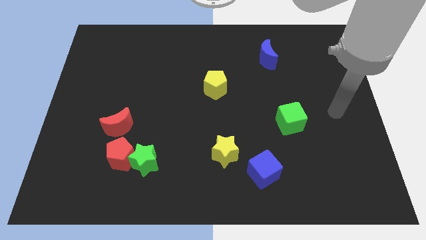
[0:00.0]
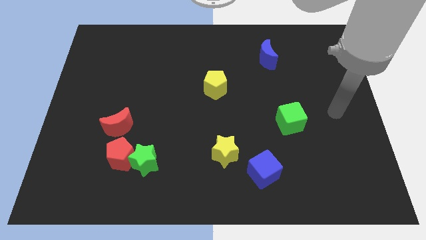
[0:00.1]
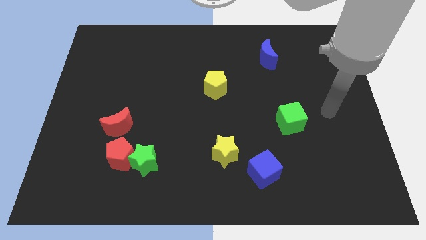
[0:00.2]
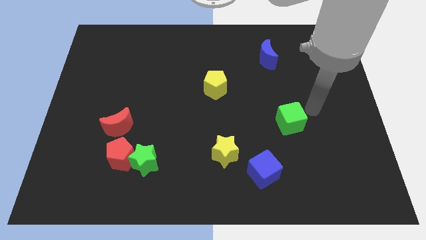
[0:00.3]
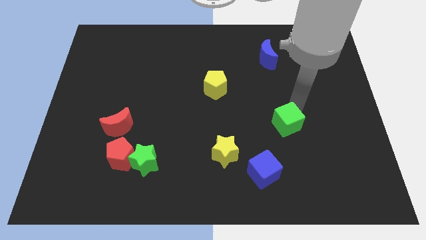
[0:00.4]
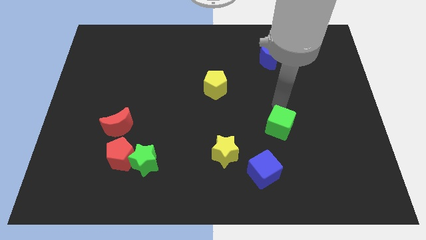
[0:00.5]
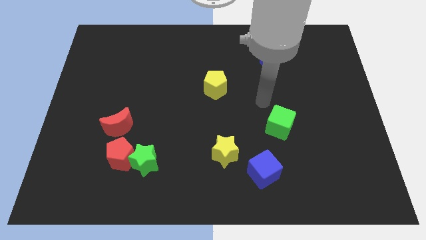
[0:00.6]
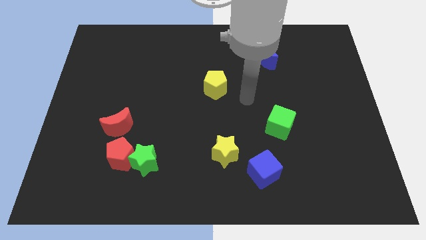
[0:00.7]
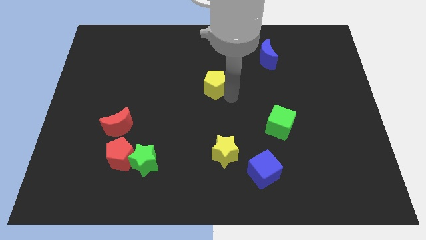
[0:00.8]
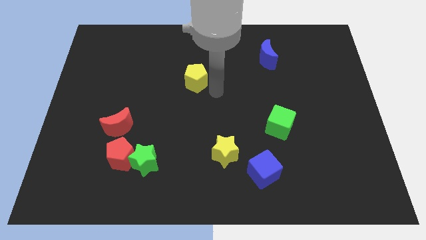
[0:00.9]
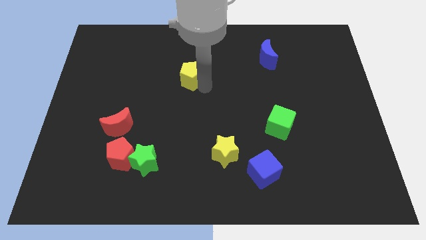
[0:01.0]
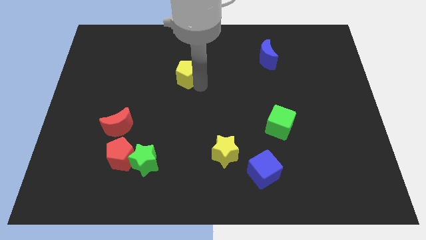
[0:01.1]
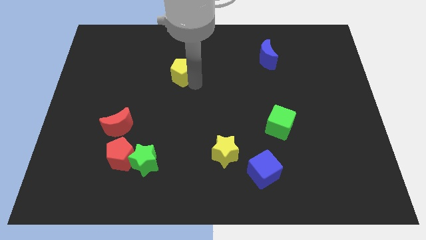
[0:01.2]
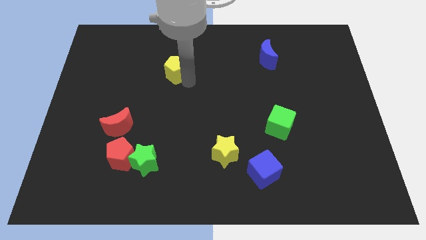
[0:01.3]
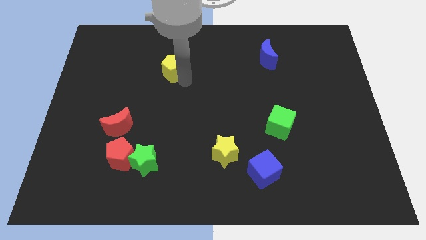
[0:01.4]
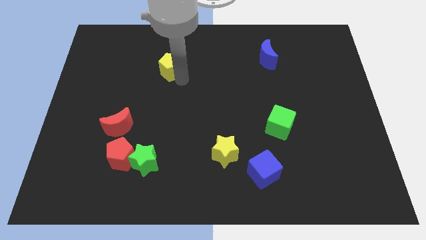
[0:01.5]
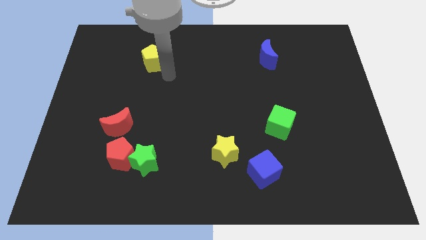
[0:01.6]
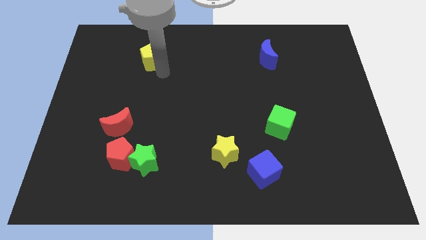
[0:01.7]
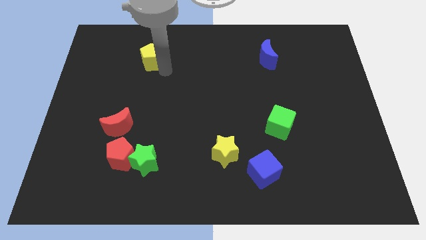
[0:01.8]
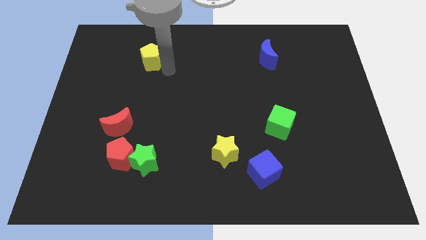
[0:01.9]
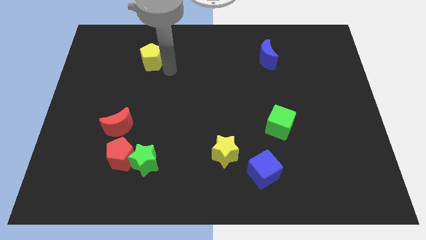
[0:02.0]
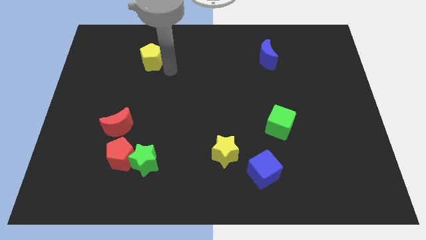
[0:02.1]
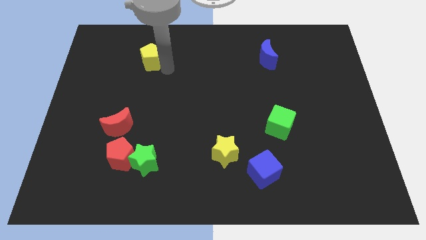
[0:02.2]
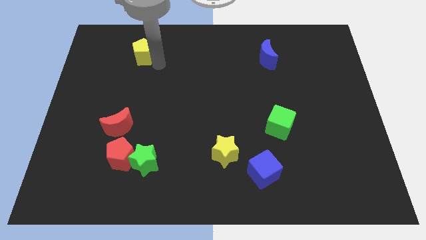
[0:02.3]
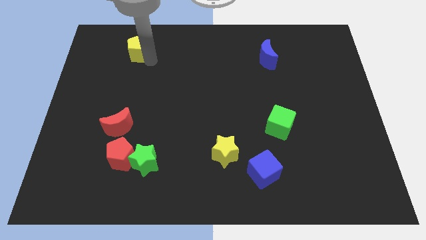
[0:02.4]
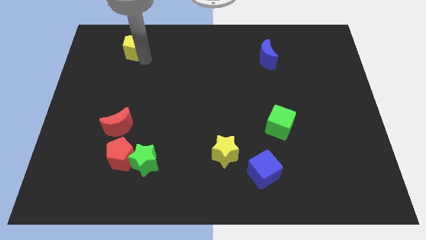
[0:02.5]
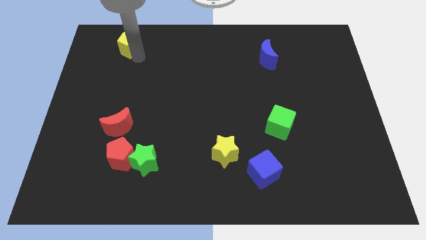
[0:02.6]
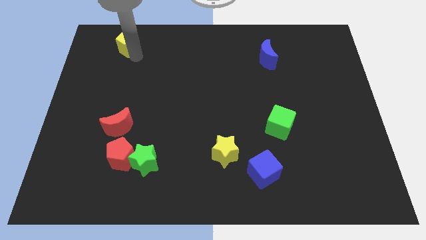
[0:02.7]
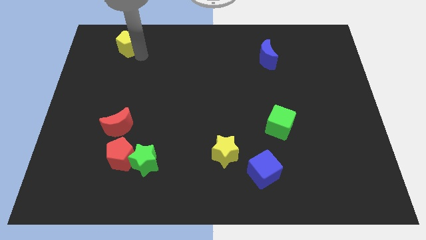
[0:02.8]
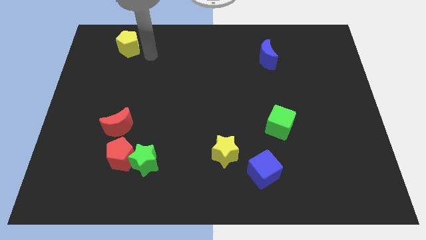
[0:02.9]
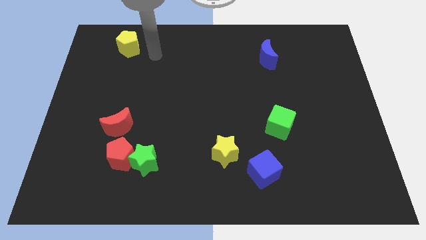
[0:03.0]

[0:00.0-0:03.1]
put the yellow pentagon vertically above the red pentagon

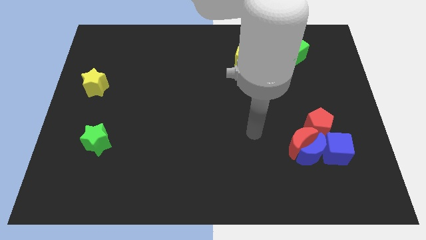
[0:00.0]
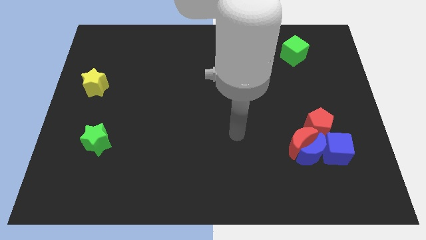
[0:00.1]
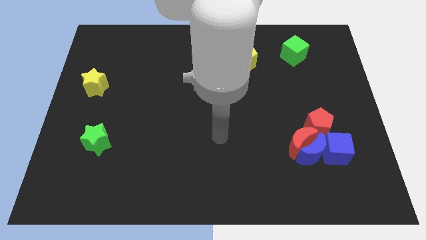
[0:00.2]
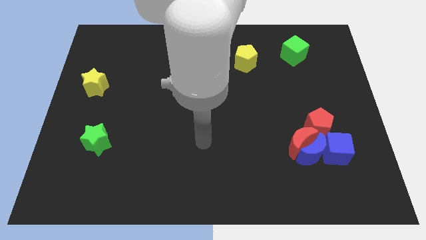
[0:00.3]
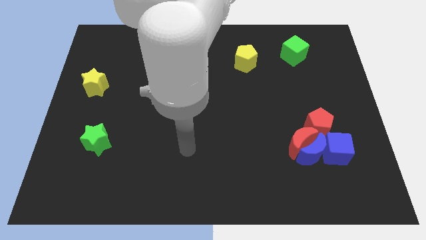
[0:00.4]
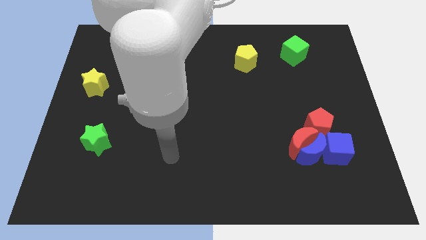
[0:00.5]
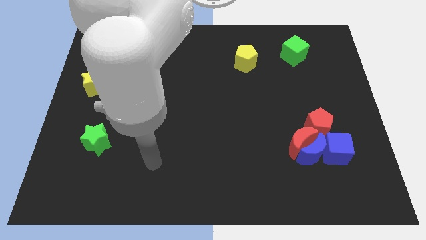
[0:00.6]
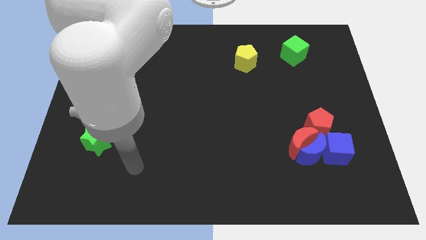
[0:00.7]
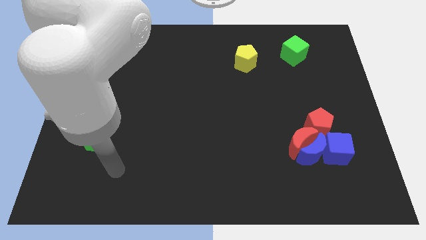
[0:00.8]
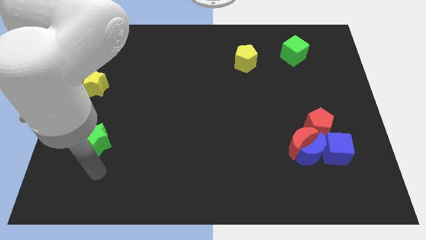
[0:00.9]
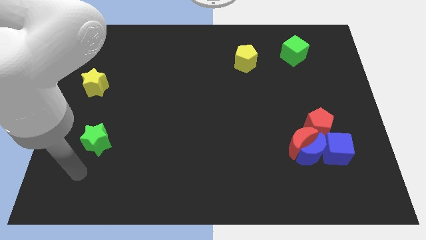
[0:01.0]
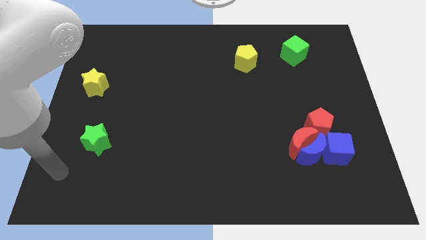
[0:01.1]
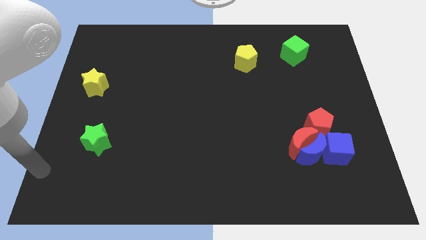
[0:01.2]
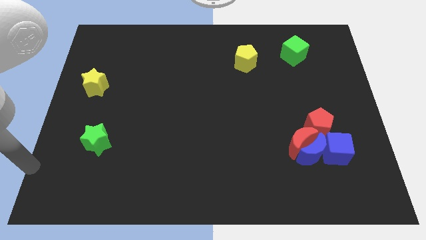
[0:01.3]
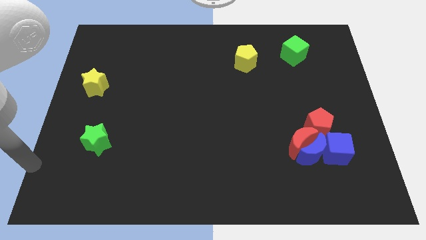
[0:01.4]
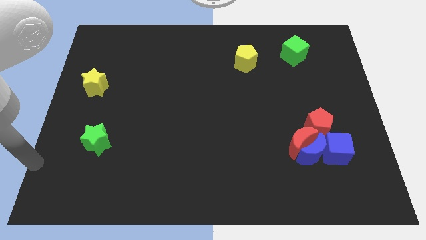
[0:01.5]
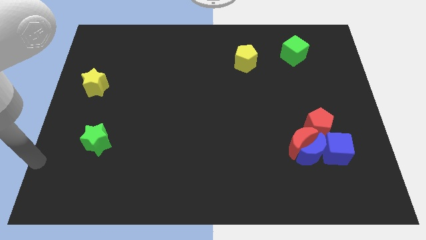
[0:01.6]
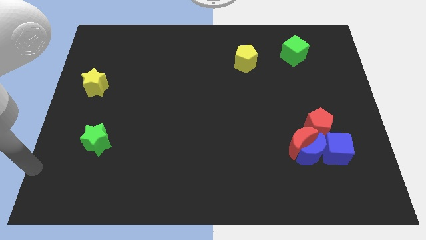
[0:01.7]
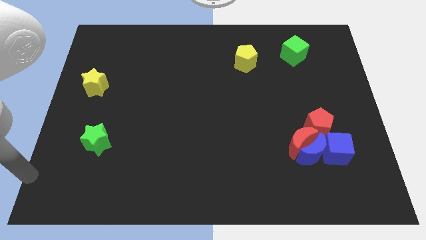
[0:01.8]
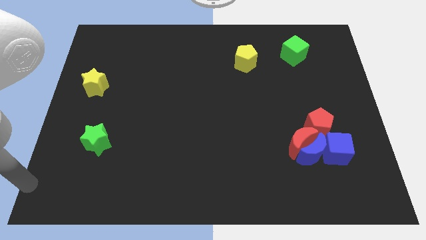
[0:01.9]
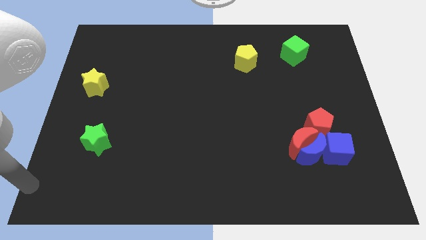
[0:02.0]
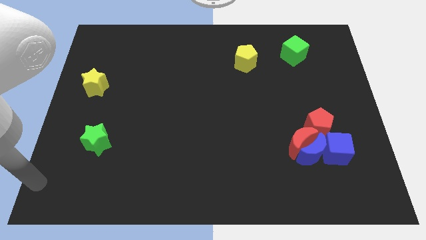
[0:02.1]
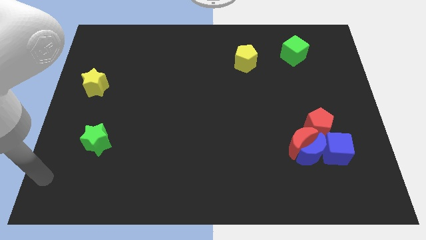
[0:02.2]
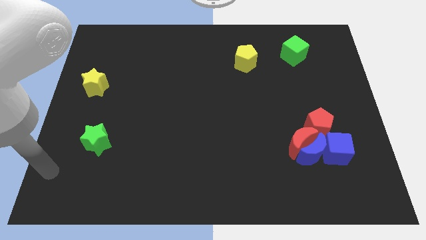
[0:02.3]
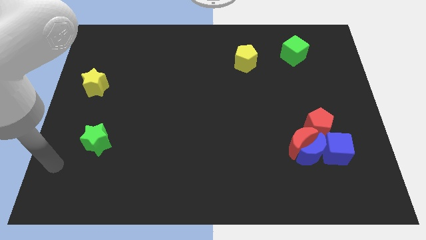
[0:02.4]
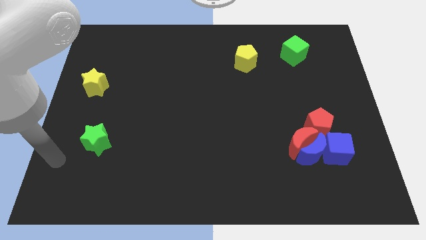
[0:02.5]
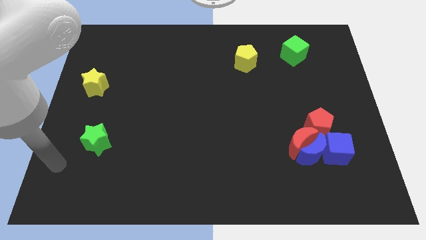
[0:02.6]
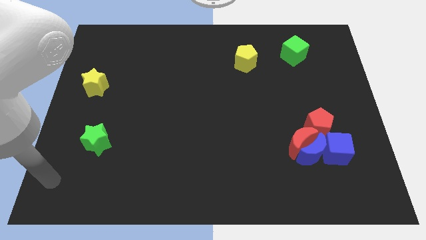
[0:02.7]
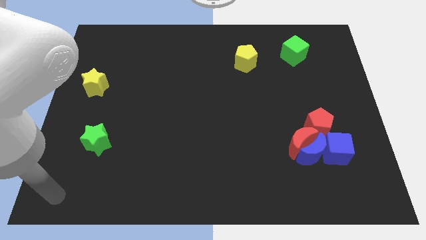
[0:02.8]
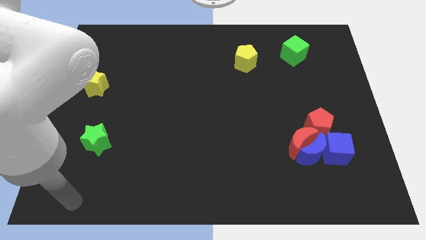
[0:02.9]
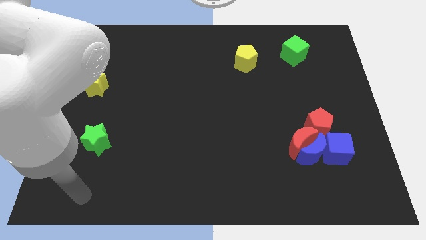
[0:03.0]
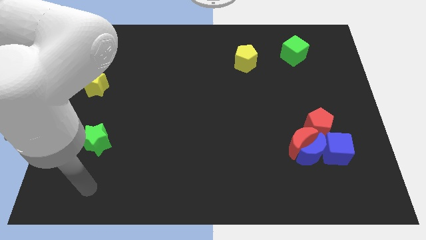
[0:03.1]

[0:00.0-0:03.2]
push your hand towards the bottom left corner side

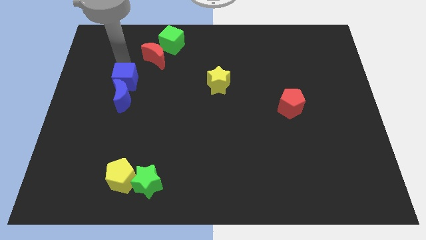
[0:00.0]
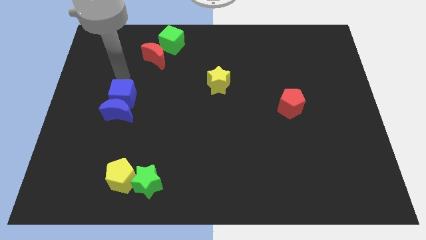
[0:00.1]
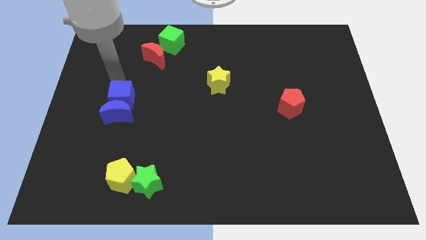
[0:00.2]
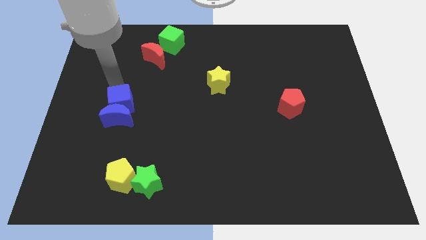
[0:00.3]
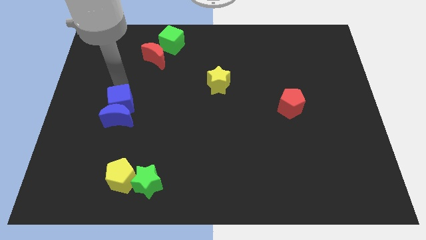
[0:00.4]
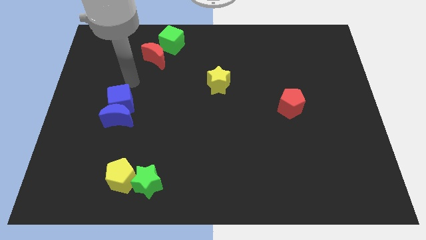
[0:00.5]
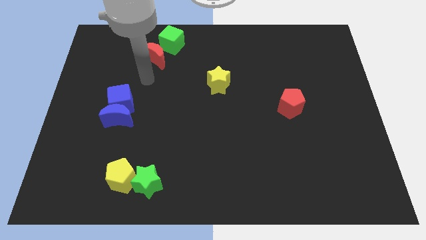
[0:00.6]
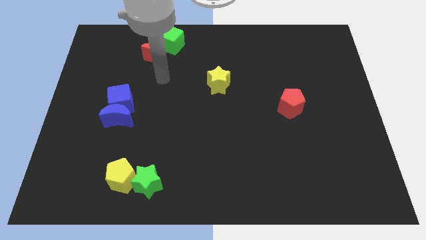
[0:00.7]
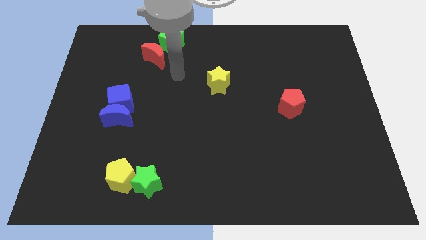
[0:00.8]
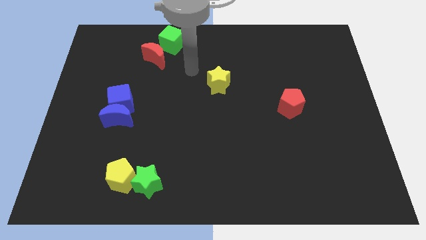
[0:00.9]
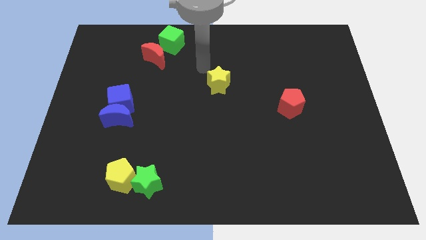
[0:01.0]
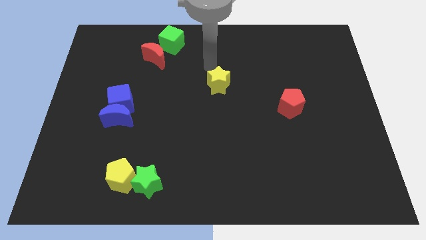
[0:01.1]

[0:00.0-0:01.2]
push the blue blocks to the center left

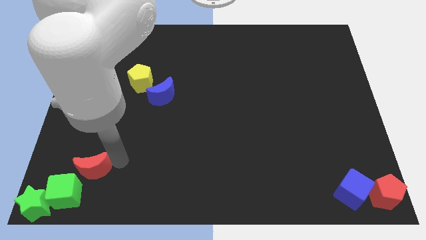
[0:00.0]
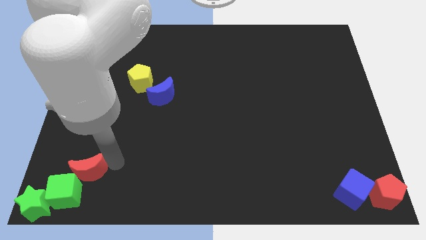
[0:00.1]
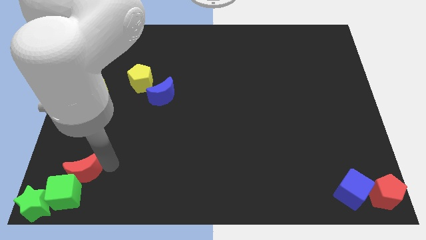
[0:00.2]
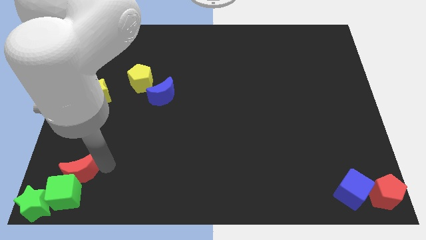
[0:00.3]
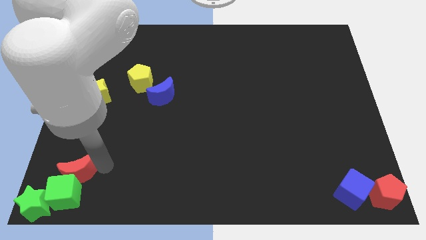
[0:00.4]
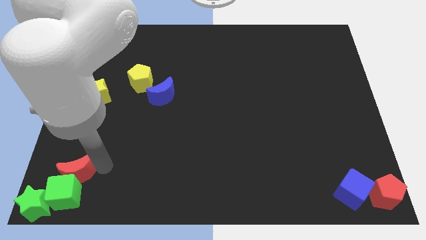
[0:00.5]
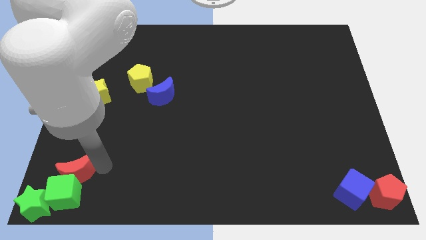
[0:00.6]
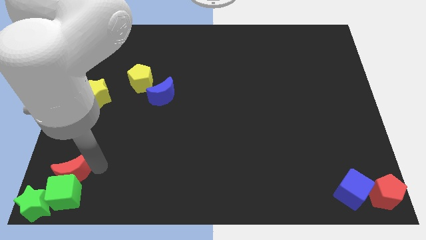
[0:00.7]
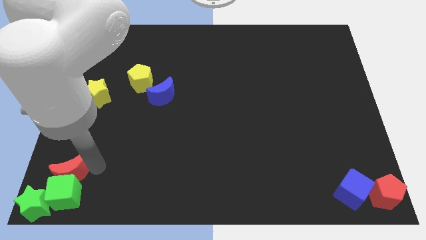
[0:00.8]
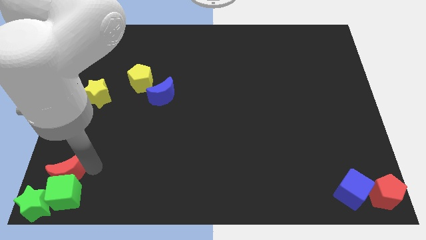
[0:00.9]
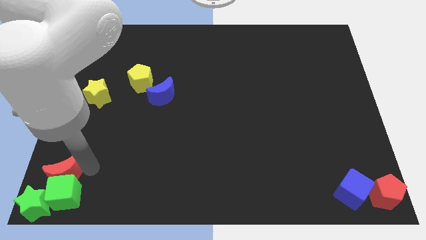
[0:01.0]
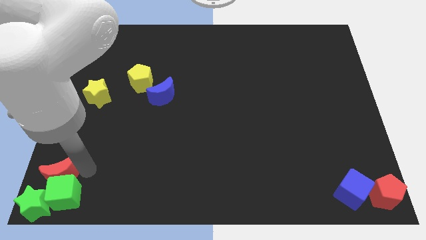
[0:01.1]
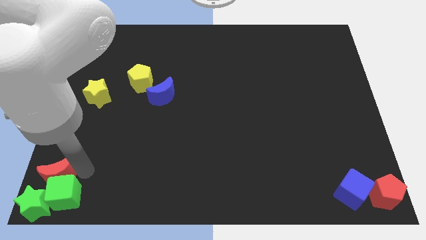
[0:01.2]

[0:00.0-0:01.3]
place the red moon above to the green cube

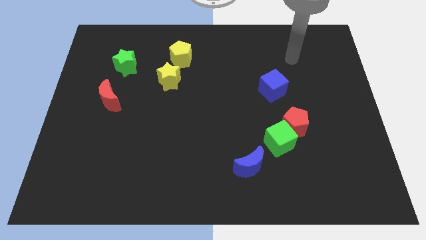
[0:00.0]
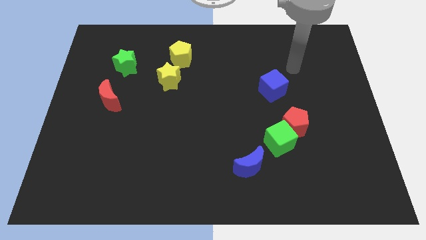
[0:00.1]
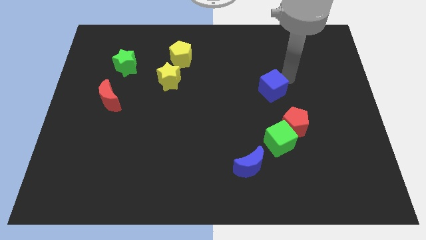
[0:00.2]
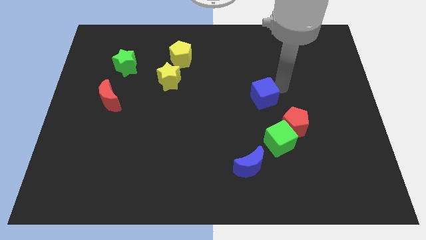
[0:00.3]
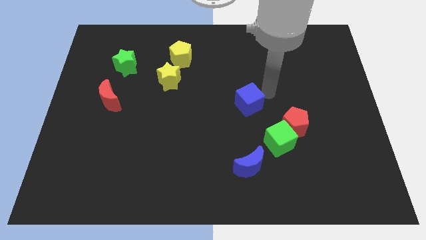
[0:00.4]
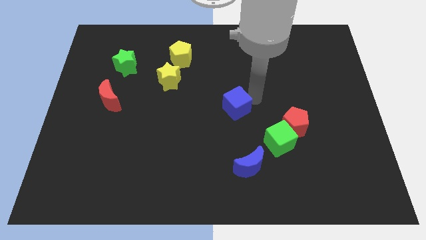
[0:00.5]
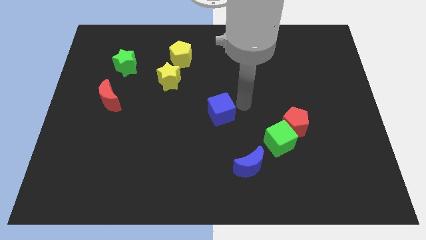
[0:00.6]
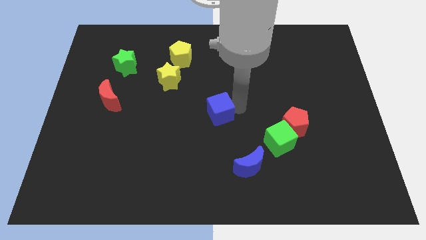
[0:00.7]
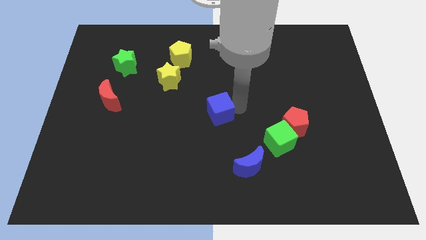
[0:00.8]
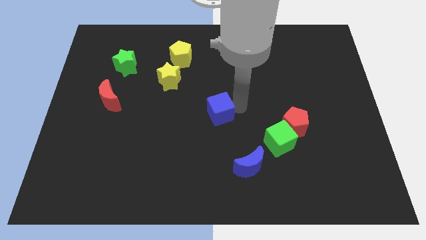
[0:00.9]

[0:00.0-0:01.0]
place the blue cube diagonally bottom right to the yellow star
